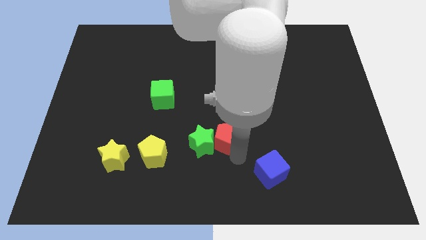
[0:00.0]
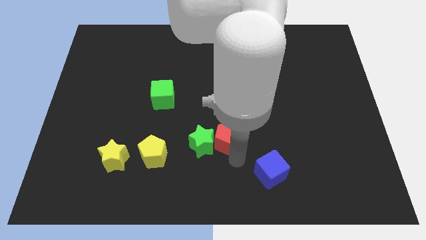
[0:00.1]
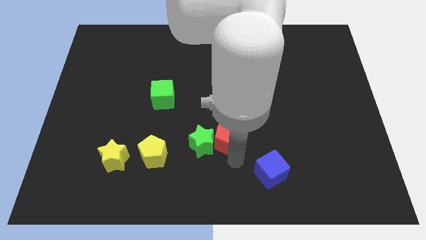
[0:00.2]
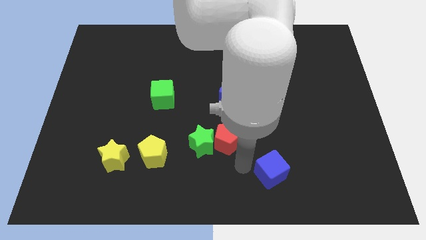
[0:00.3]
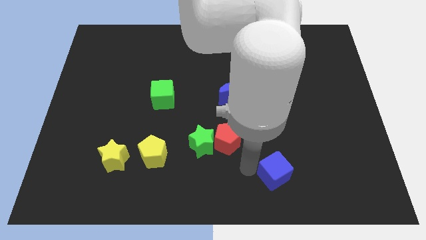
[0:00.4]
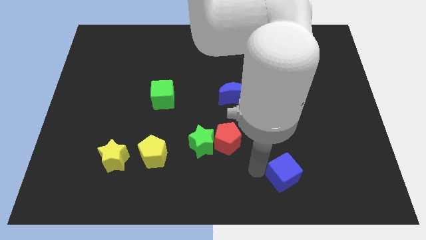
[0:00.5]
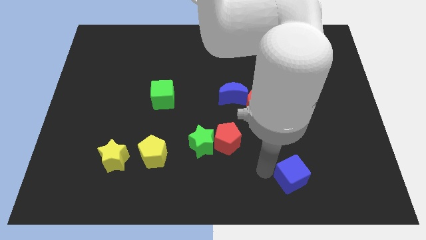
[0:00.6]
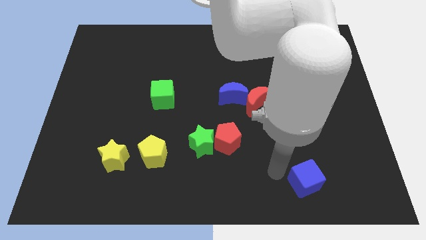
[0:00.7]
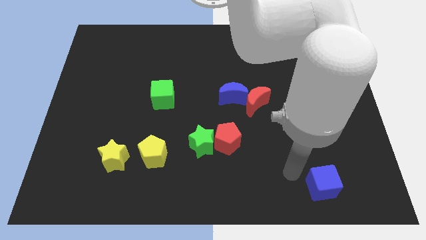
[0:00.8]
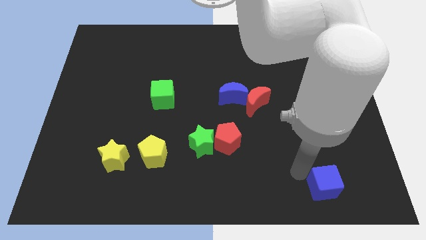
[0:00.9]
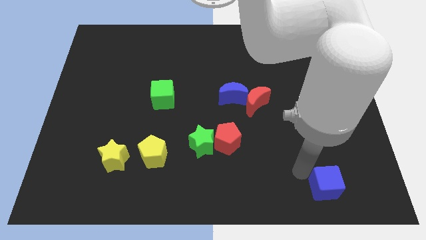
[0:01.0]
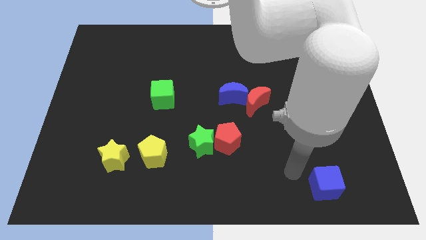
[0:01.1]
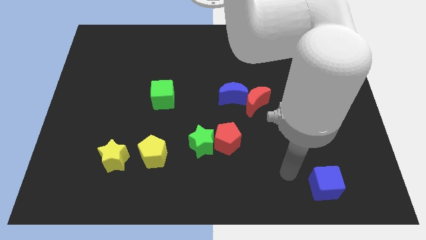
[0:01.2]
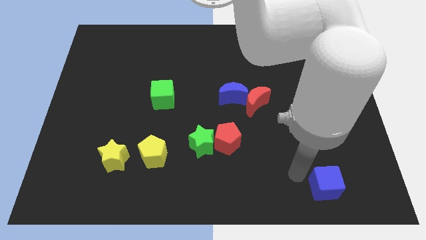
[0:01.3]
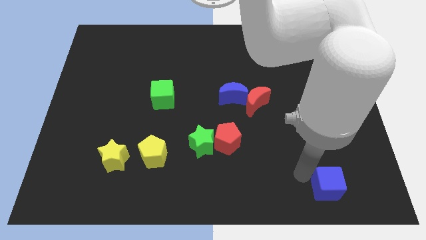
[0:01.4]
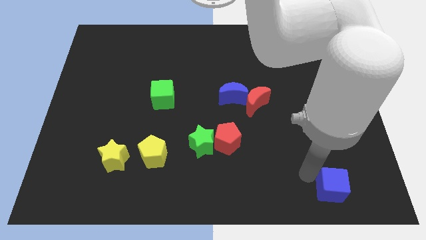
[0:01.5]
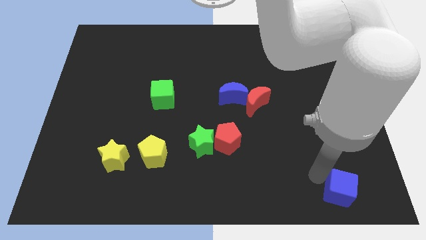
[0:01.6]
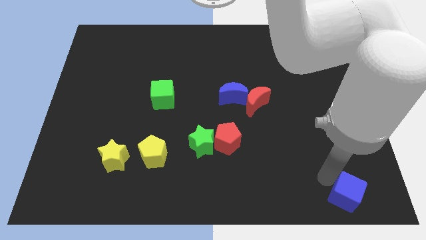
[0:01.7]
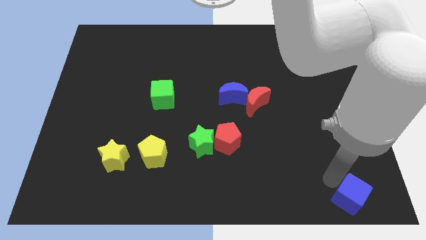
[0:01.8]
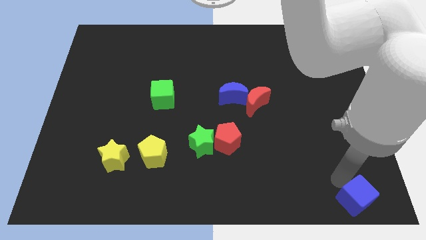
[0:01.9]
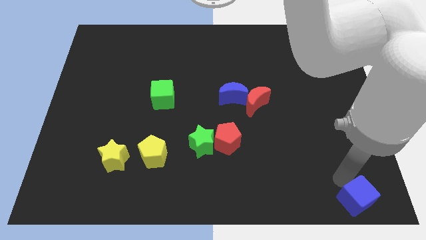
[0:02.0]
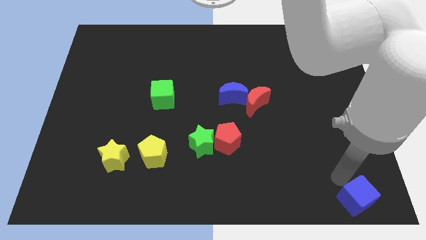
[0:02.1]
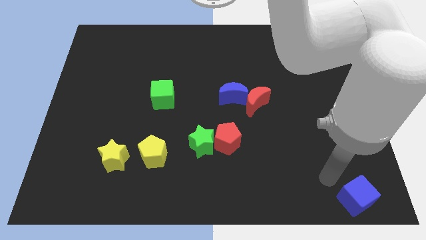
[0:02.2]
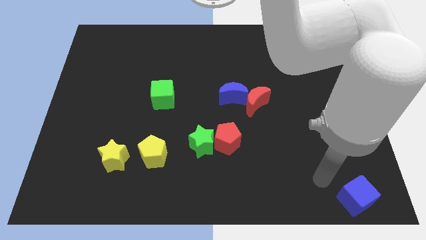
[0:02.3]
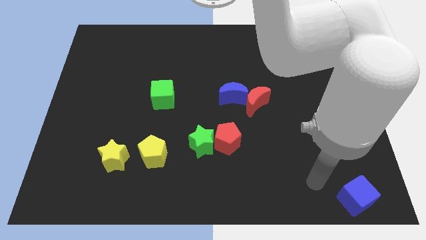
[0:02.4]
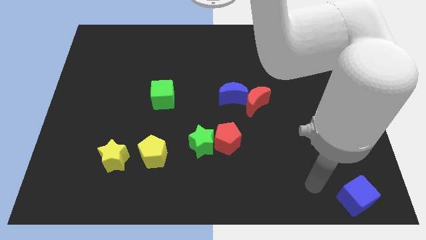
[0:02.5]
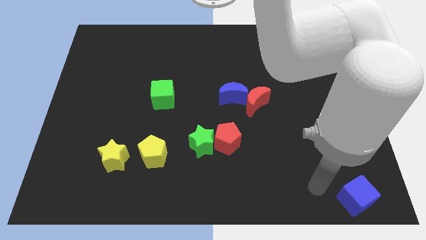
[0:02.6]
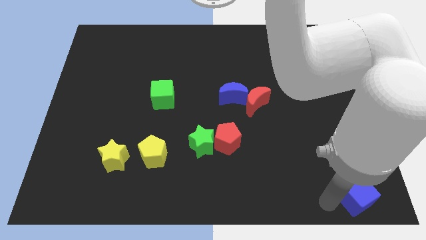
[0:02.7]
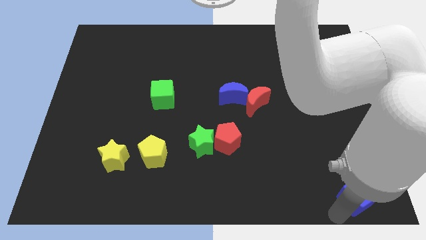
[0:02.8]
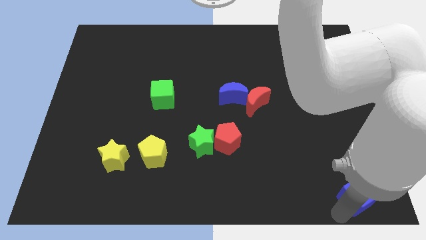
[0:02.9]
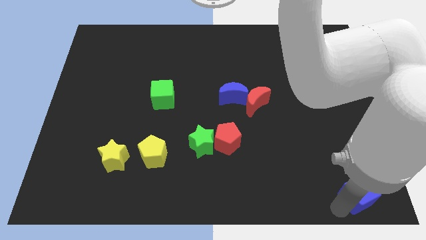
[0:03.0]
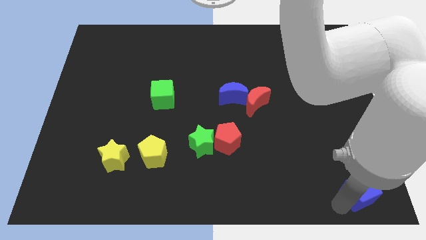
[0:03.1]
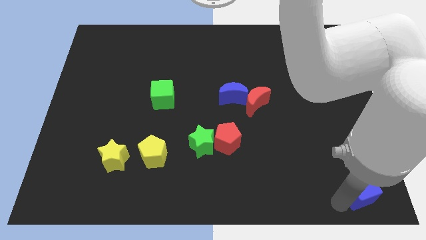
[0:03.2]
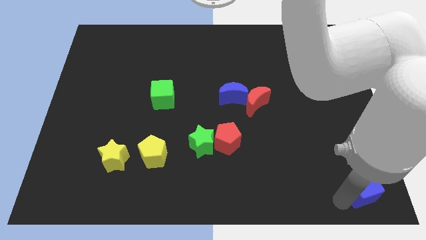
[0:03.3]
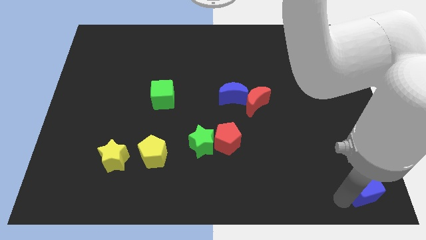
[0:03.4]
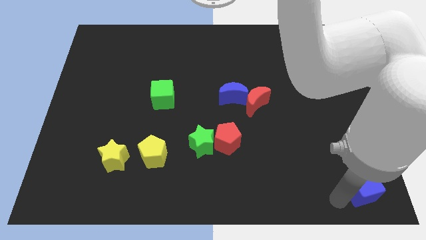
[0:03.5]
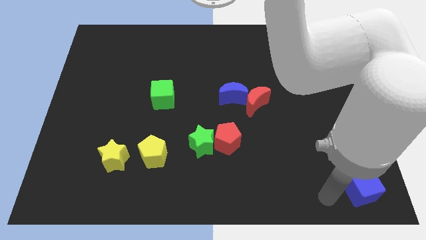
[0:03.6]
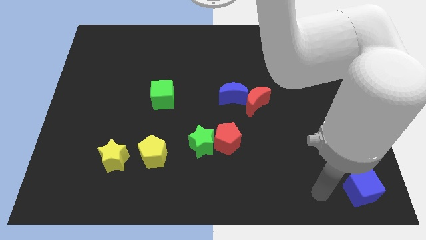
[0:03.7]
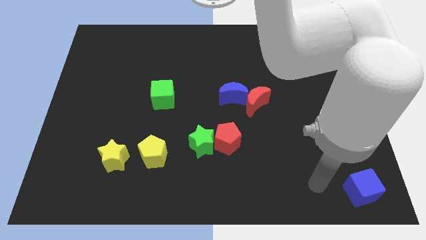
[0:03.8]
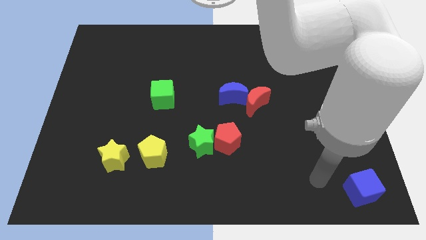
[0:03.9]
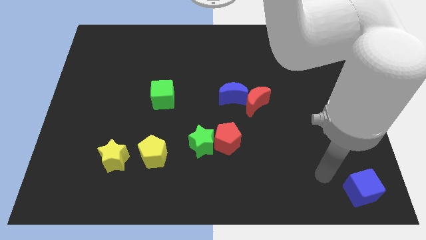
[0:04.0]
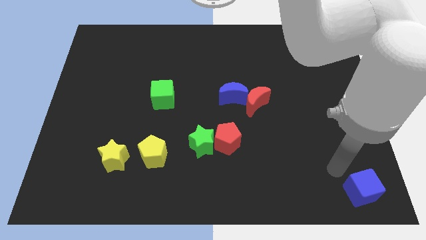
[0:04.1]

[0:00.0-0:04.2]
move the blue cube to the bottom right

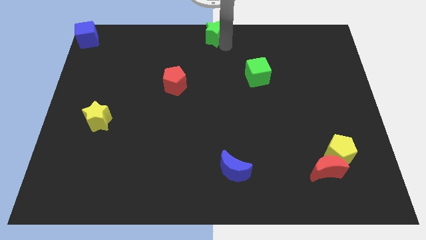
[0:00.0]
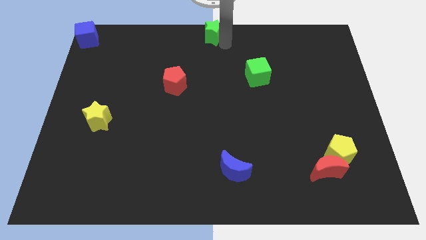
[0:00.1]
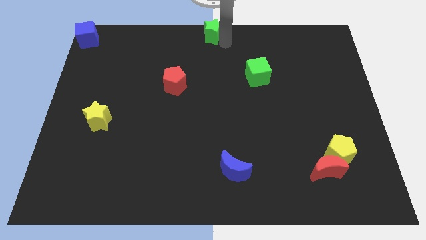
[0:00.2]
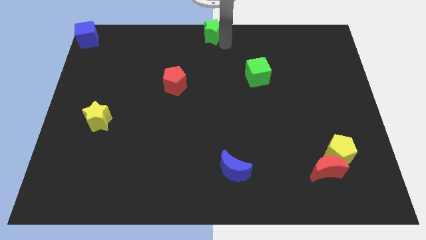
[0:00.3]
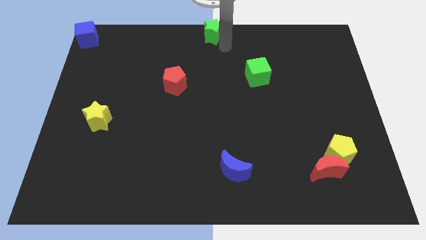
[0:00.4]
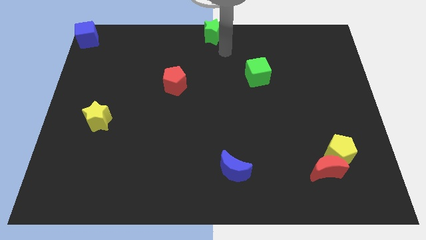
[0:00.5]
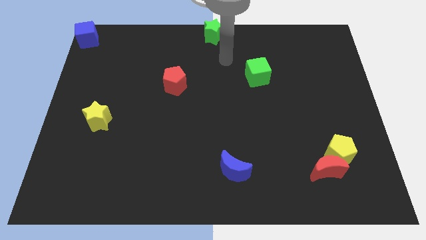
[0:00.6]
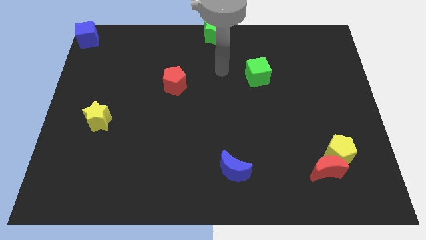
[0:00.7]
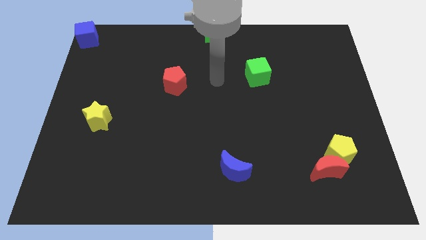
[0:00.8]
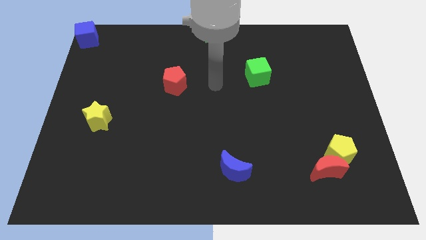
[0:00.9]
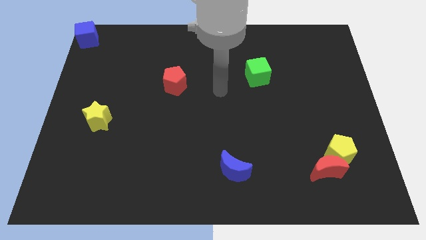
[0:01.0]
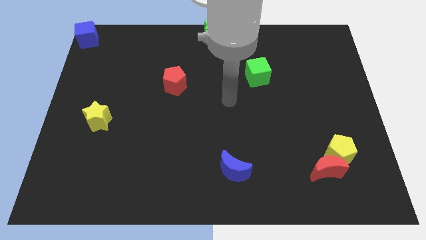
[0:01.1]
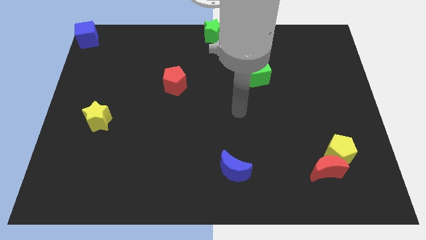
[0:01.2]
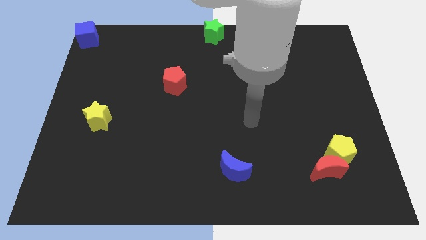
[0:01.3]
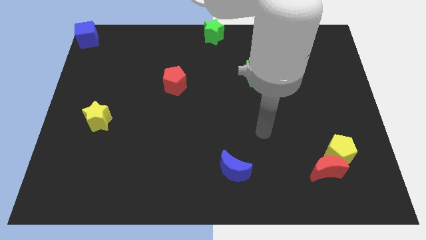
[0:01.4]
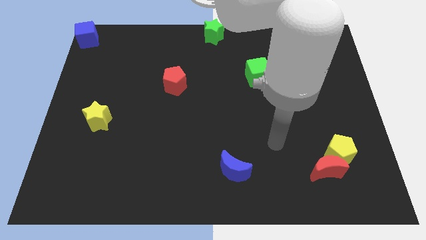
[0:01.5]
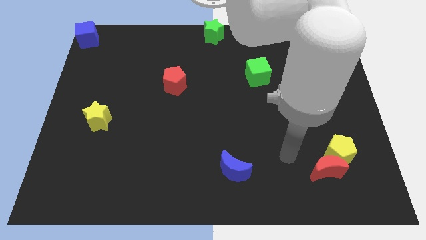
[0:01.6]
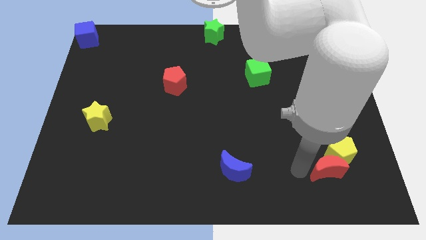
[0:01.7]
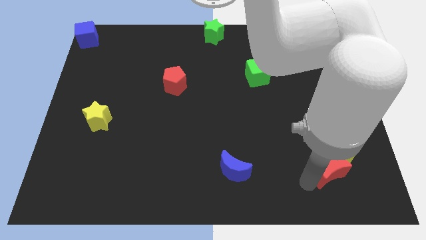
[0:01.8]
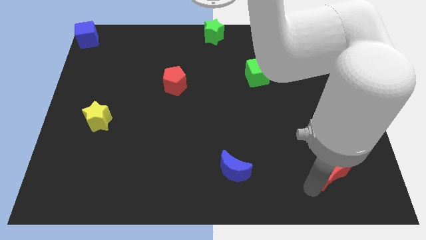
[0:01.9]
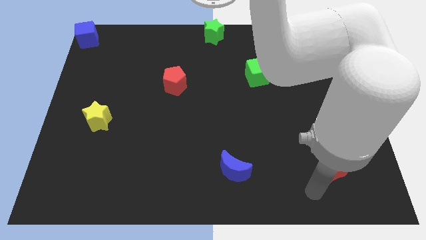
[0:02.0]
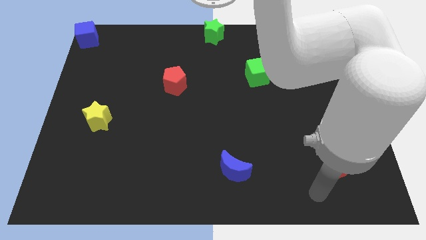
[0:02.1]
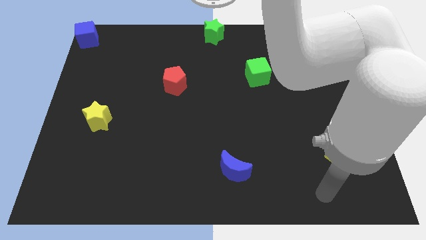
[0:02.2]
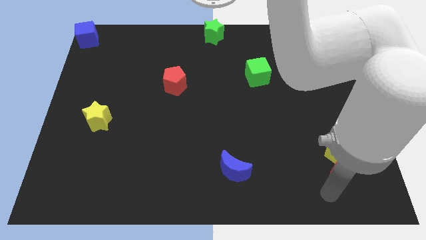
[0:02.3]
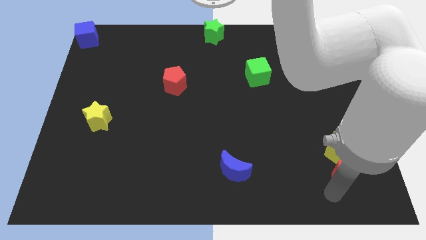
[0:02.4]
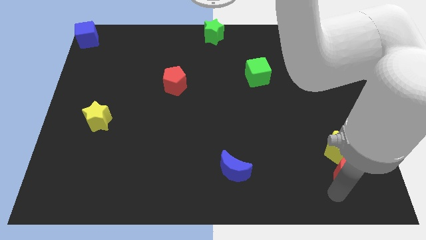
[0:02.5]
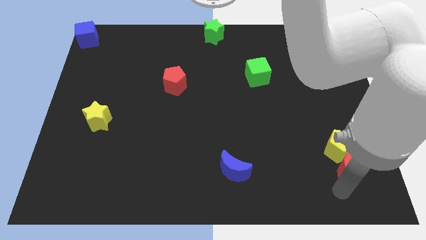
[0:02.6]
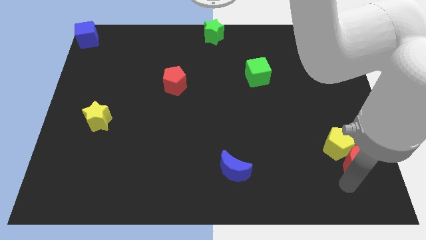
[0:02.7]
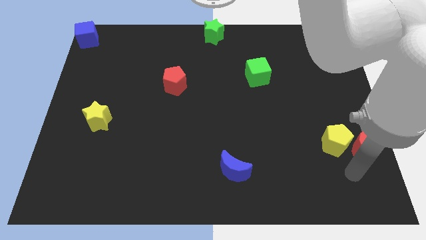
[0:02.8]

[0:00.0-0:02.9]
go near red moon

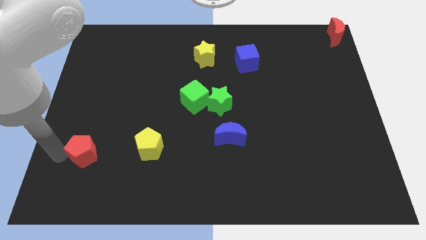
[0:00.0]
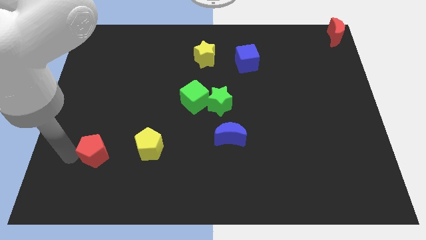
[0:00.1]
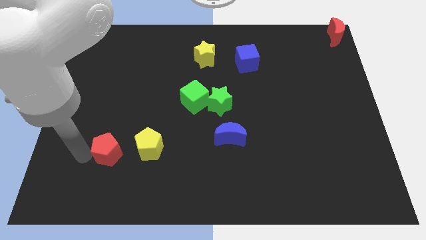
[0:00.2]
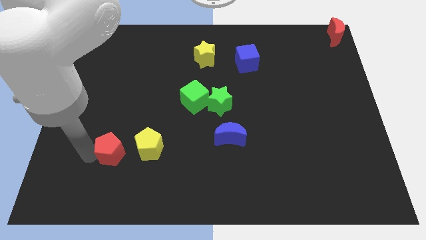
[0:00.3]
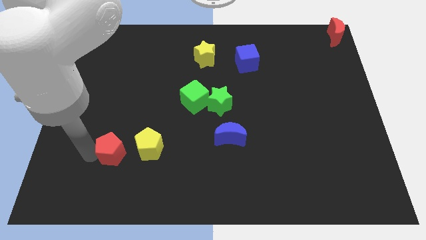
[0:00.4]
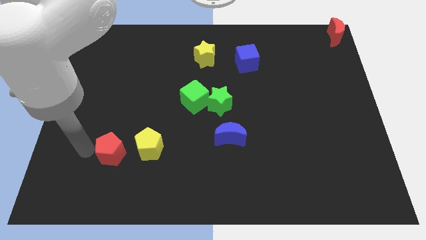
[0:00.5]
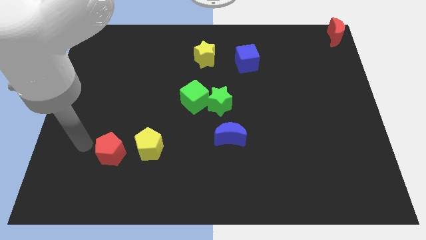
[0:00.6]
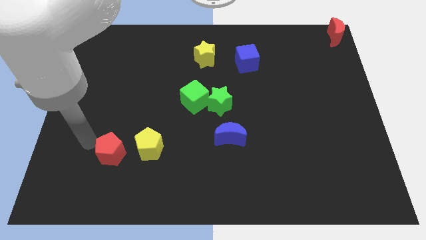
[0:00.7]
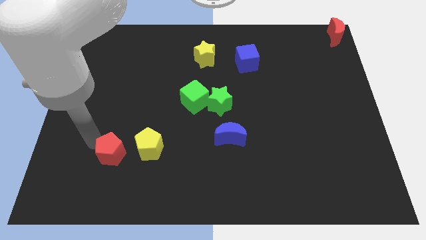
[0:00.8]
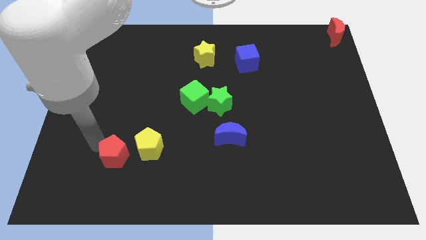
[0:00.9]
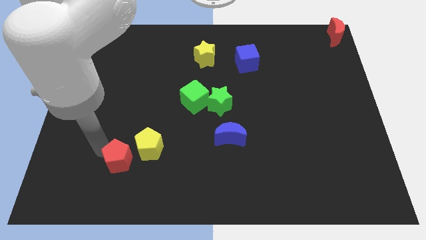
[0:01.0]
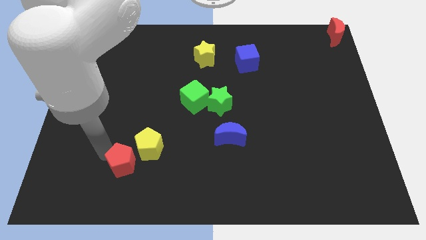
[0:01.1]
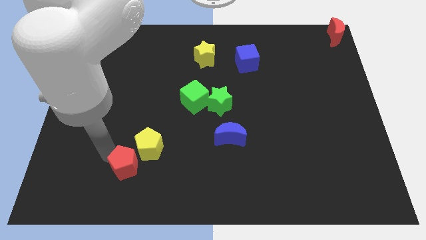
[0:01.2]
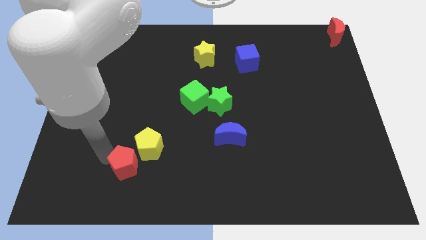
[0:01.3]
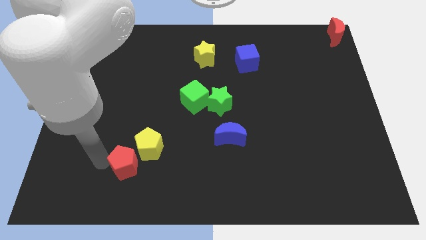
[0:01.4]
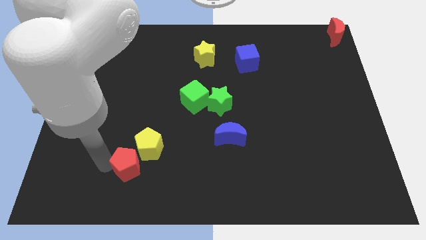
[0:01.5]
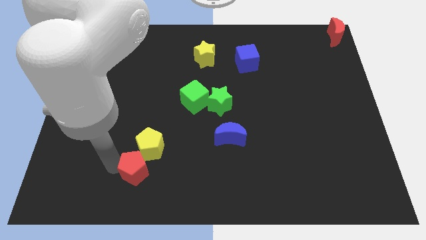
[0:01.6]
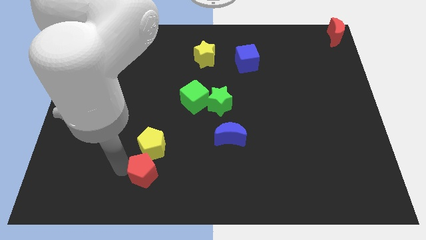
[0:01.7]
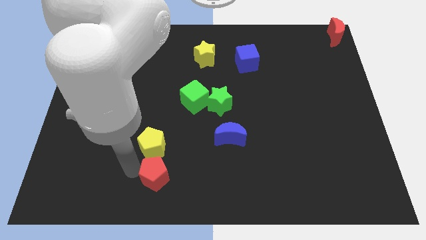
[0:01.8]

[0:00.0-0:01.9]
place the red pentagon below the yellow pentagon
